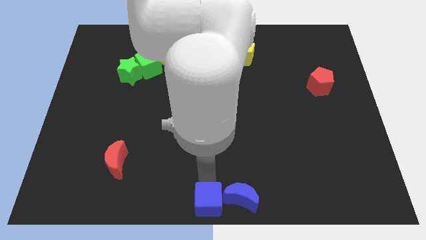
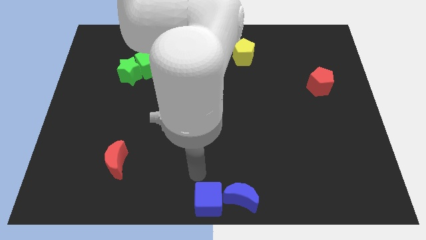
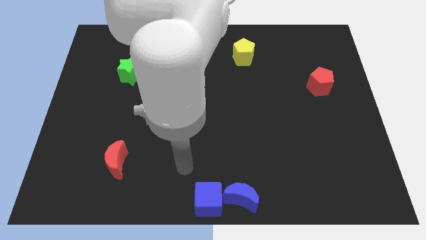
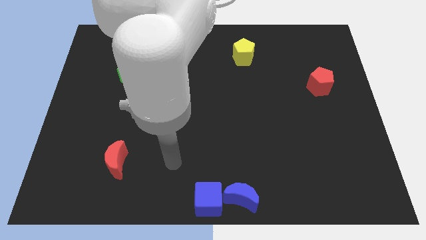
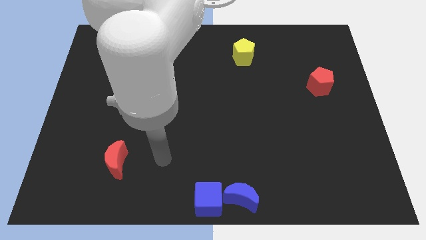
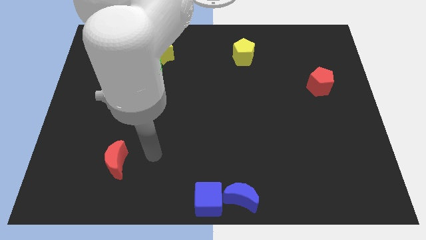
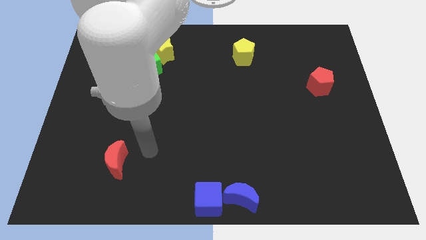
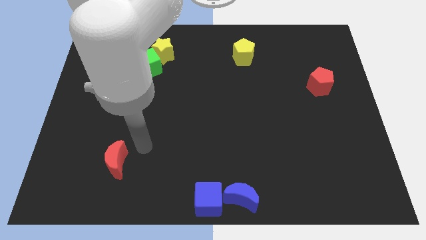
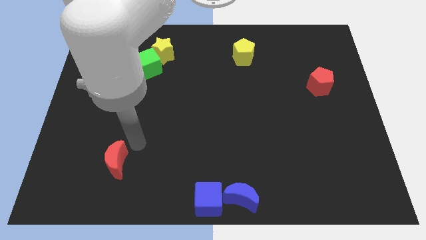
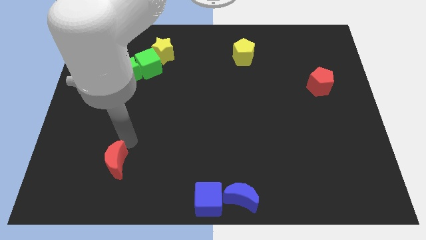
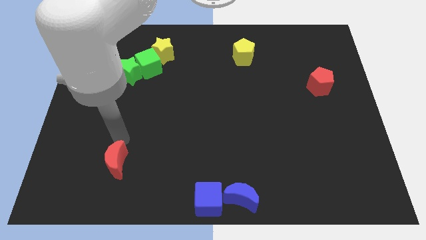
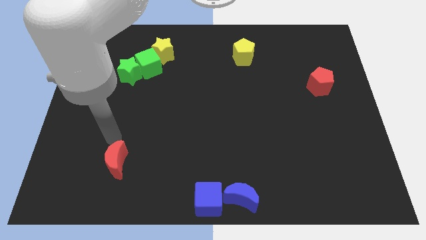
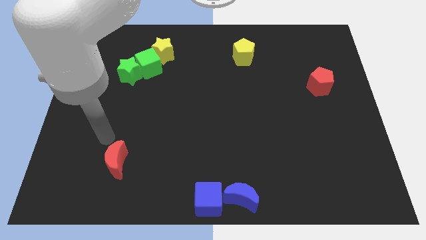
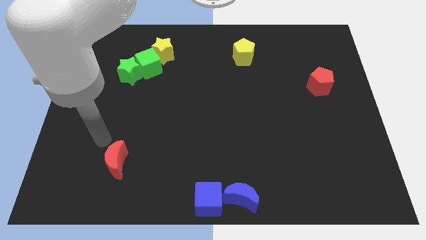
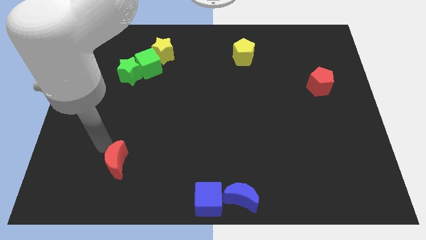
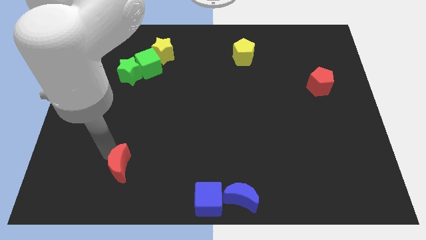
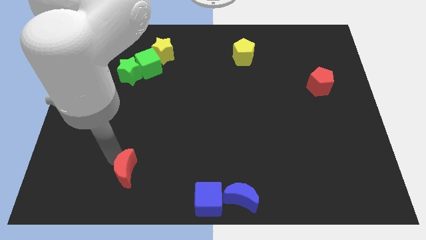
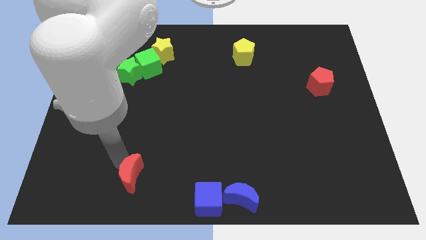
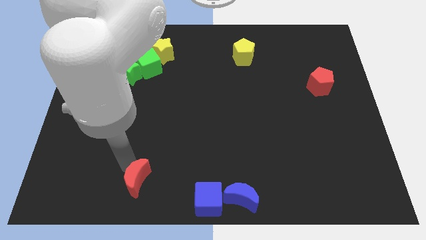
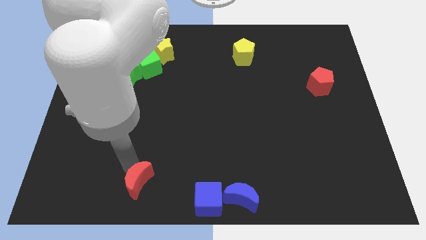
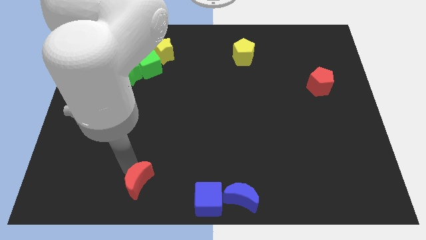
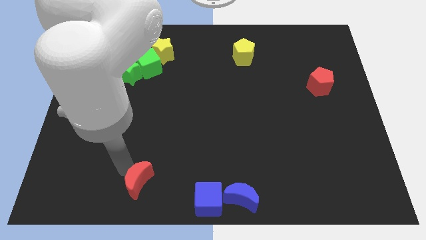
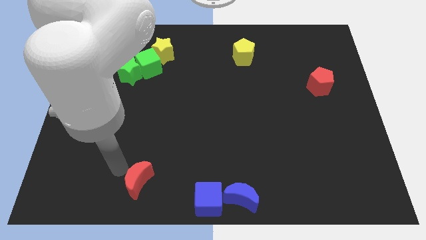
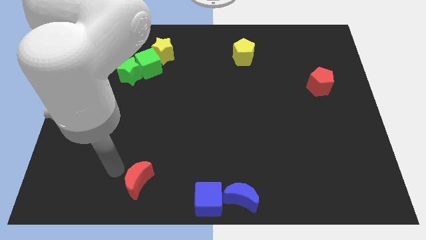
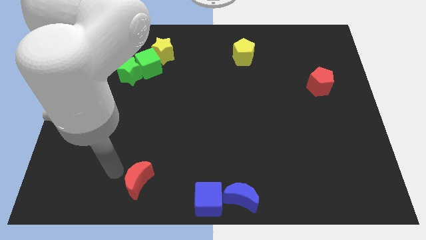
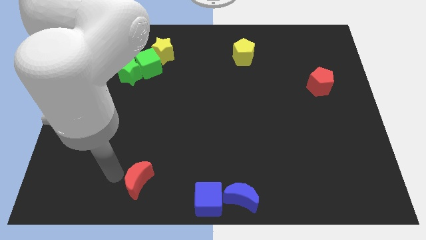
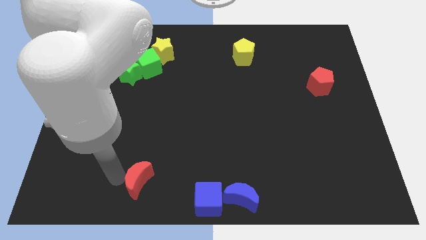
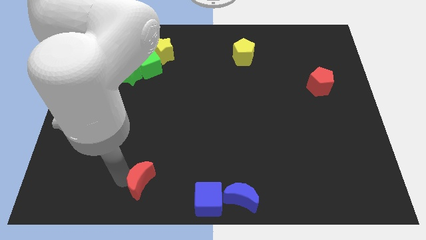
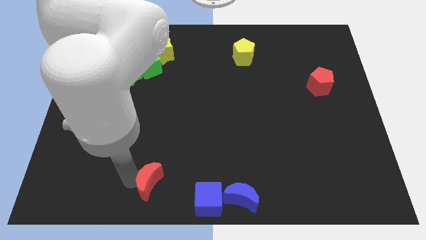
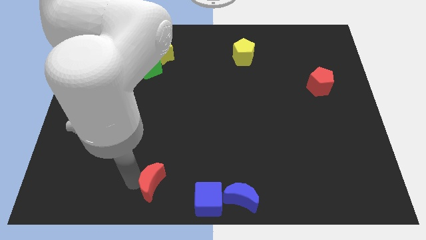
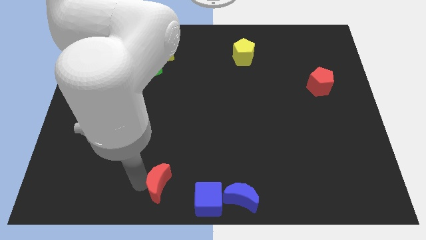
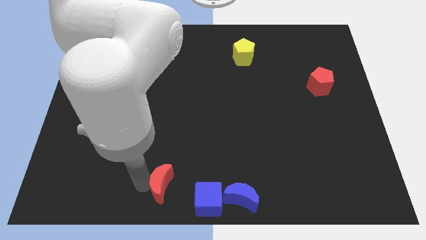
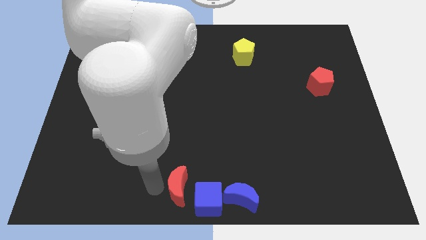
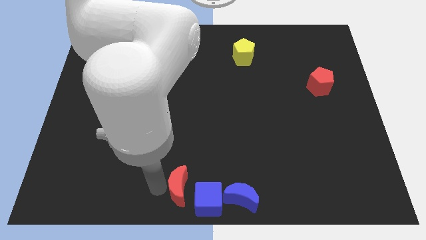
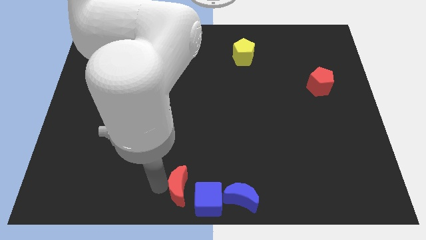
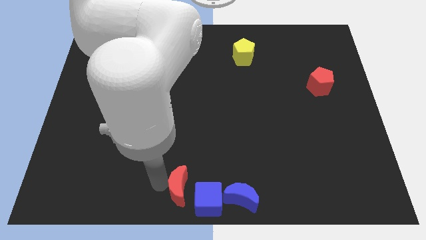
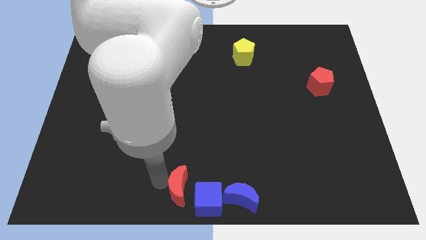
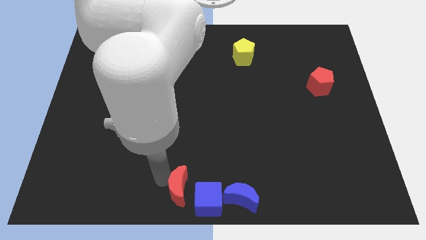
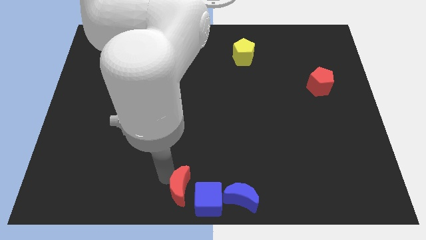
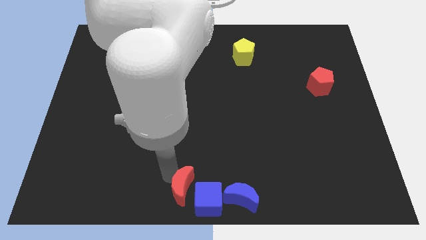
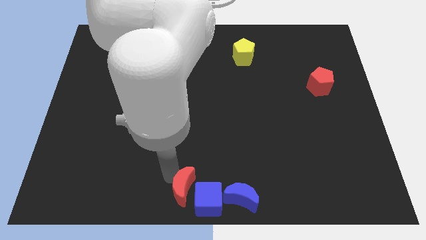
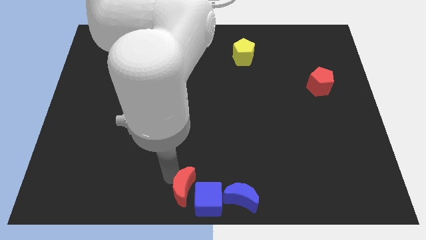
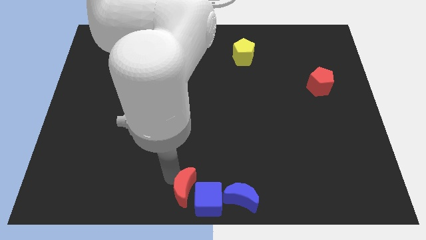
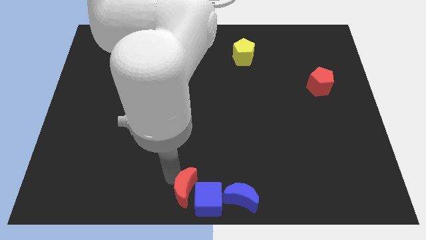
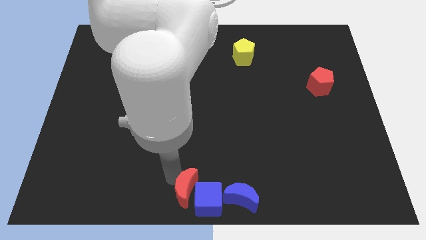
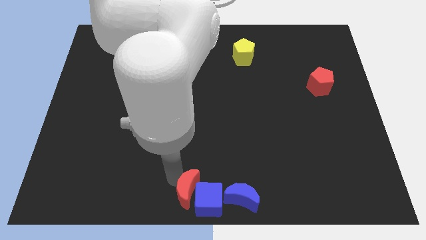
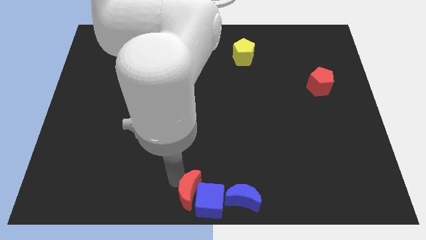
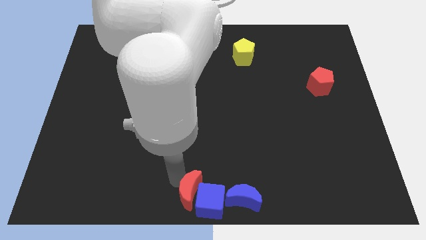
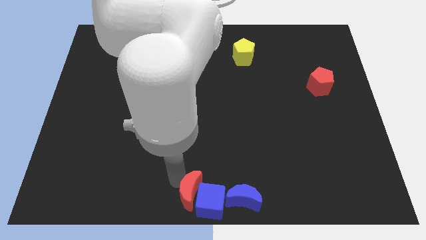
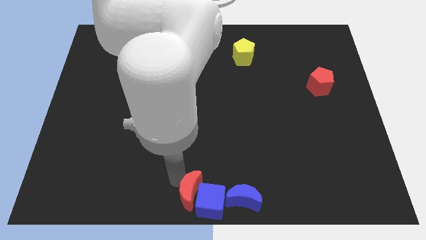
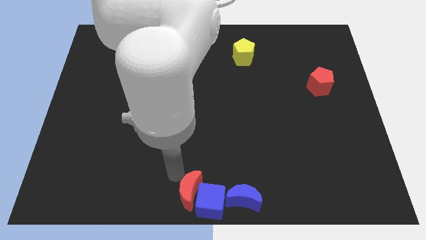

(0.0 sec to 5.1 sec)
move the red crescent at the bottom center of the board

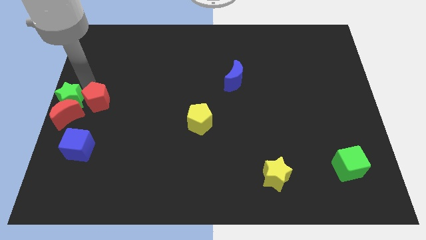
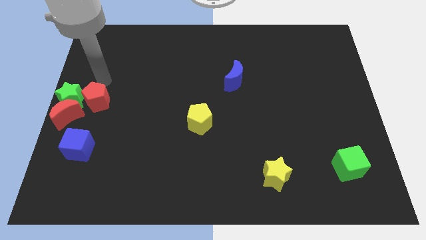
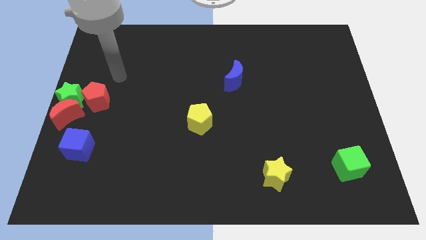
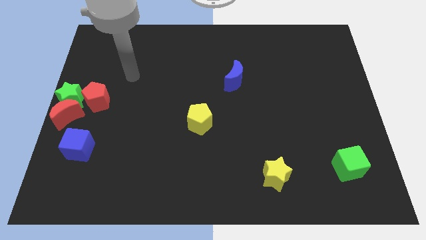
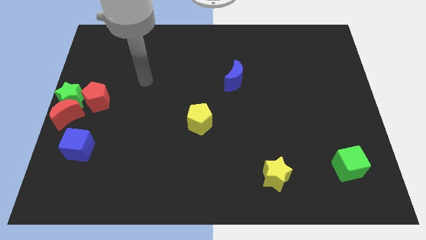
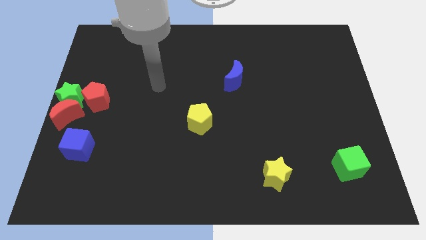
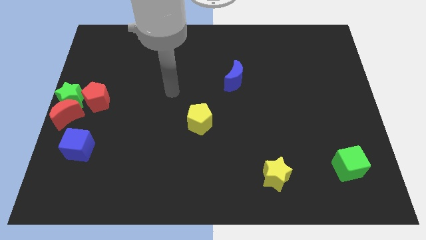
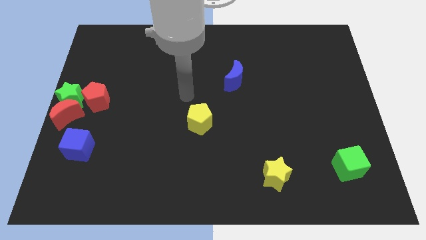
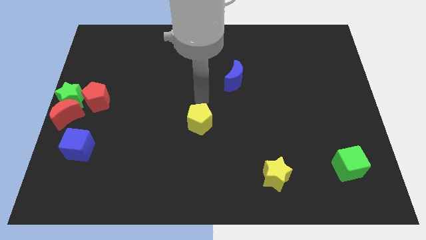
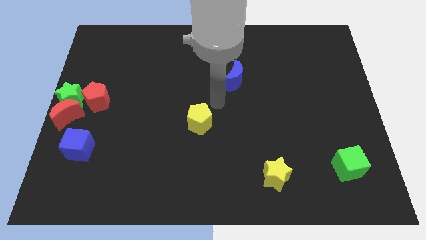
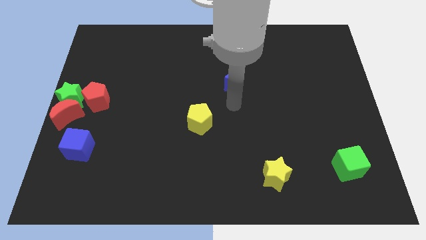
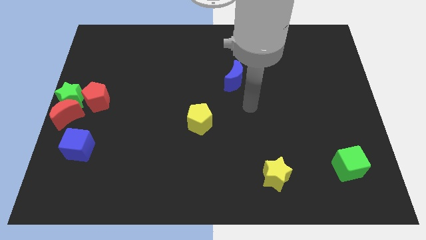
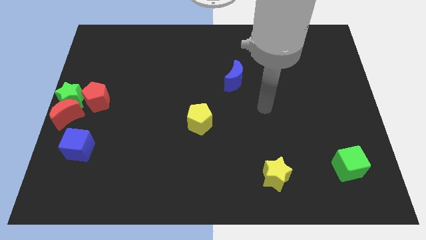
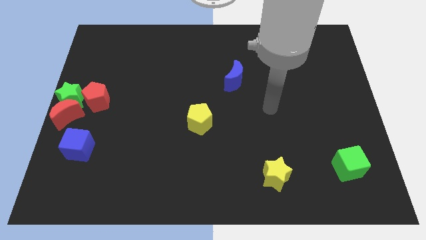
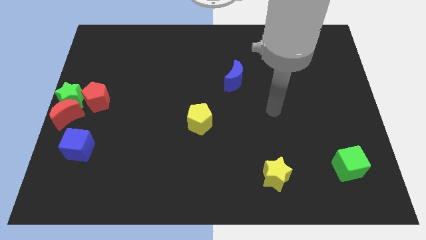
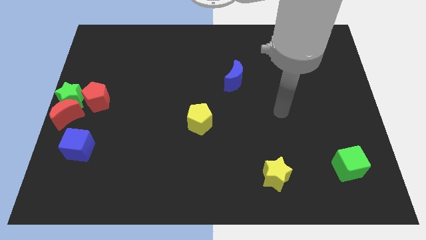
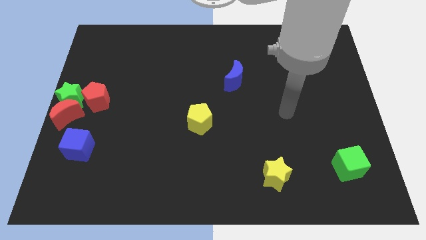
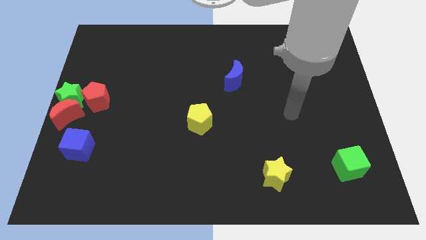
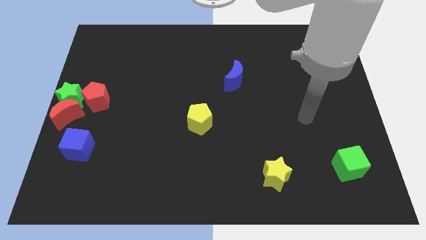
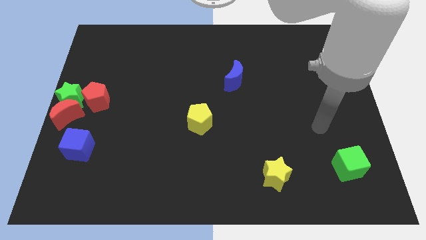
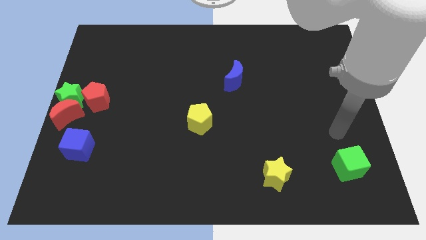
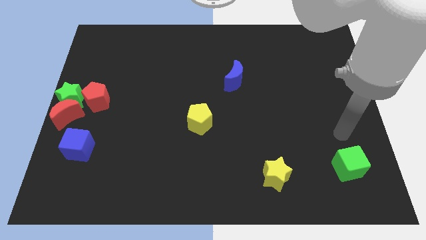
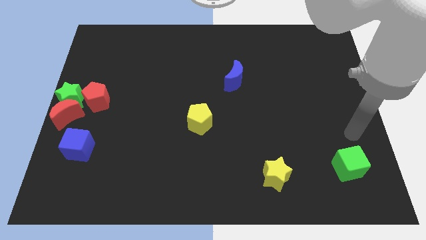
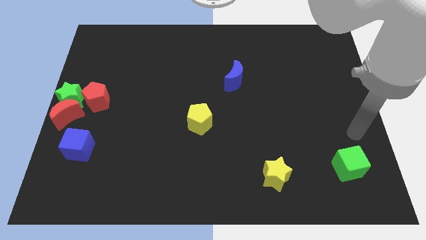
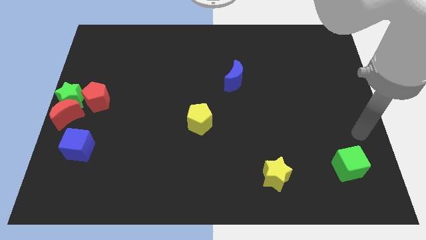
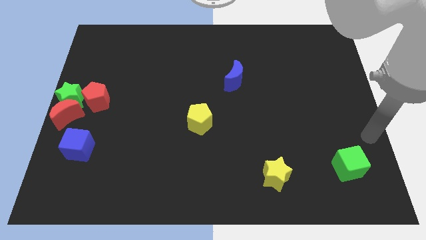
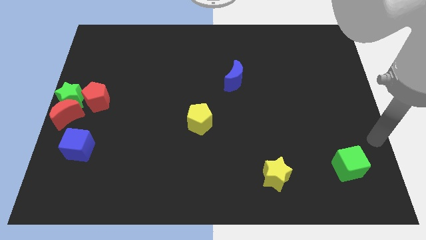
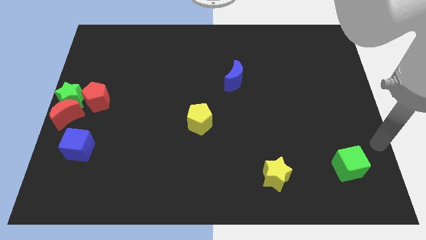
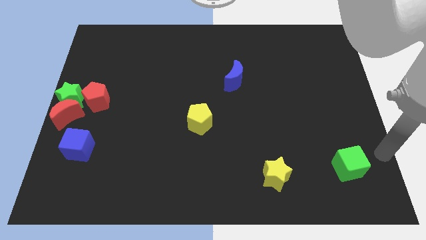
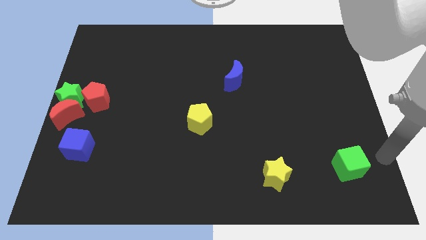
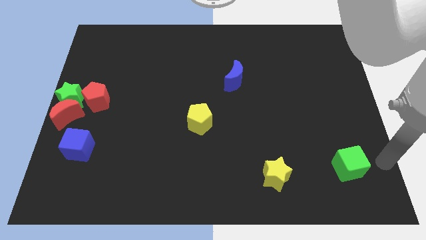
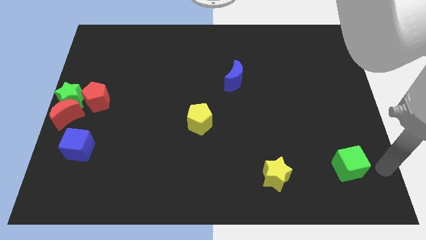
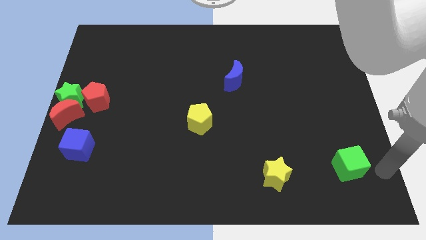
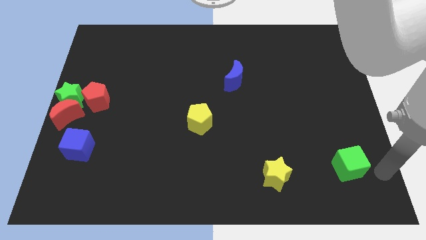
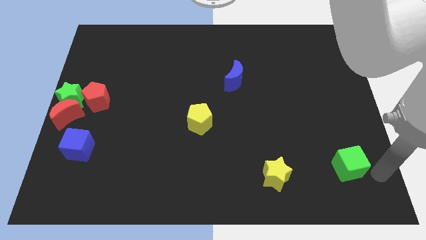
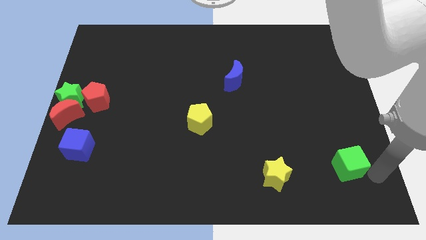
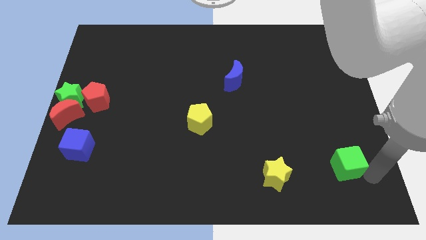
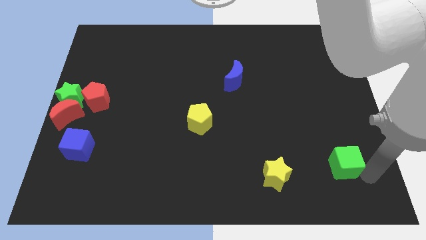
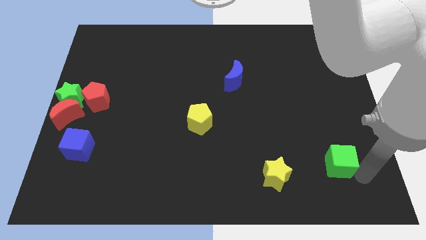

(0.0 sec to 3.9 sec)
move your arm away from the green star

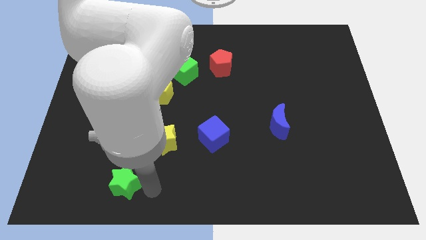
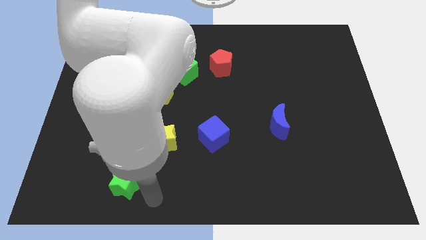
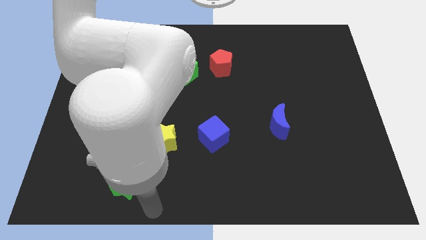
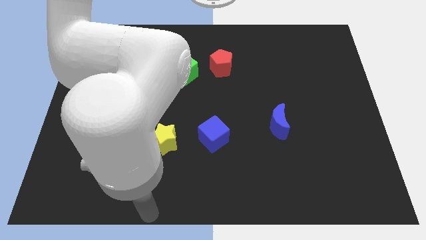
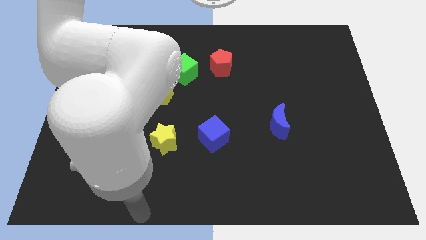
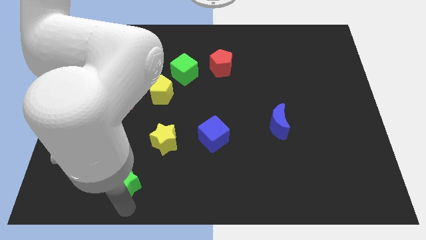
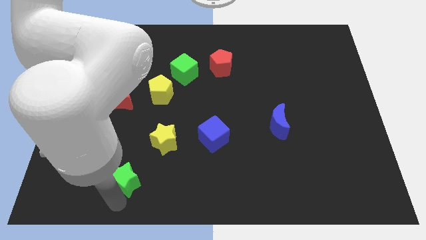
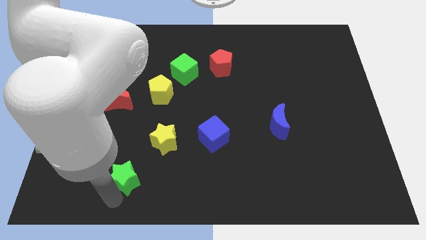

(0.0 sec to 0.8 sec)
touch the bottom of green star
